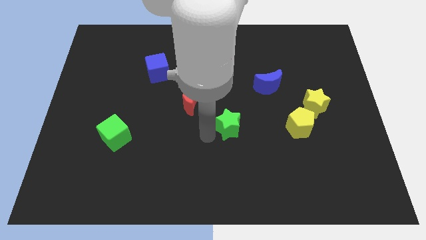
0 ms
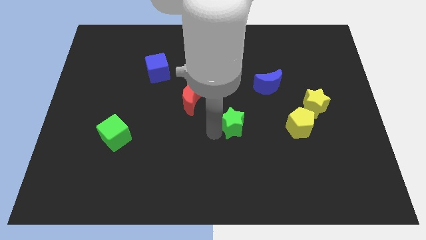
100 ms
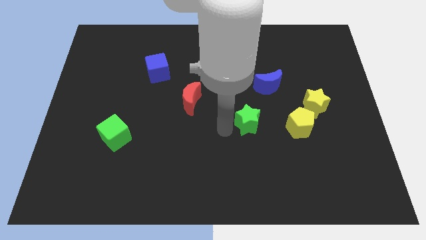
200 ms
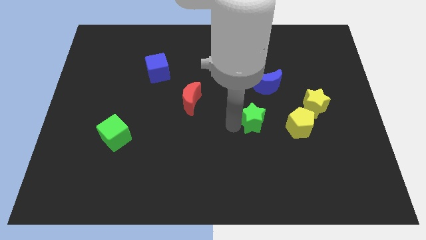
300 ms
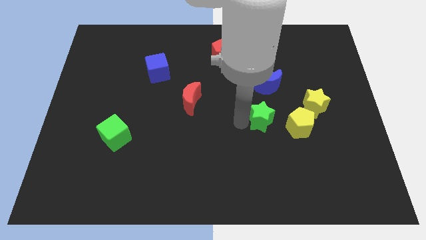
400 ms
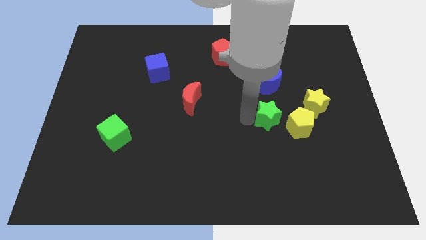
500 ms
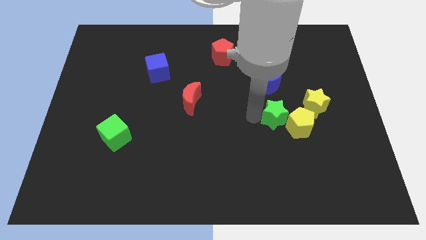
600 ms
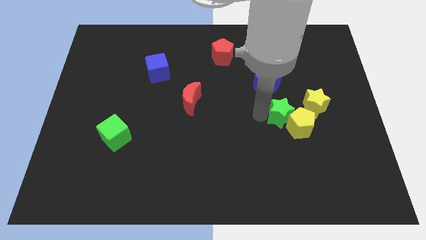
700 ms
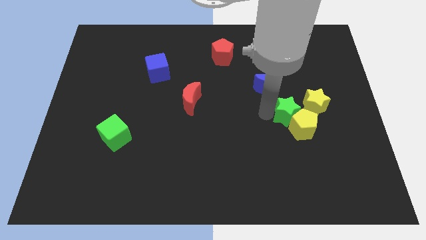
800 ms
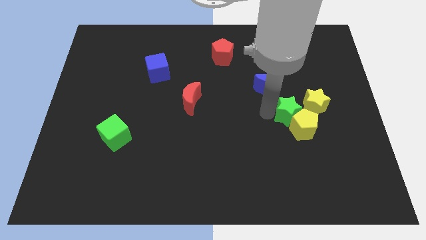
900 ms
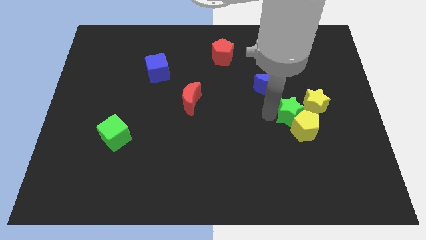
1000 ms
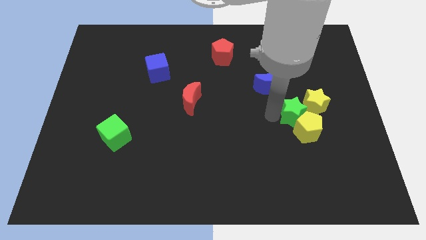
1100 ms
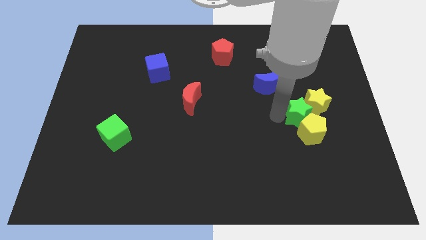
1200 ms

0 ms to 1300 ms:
place the green star diagonal top left of the yellow pentagon

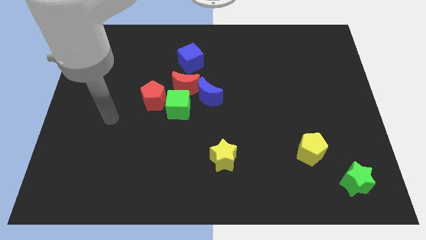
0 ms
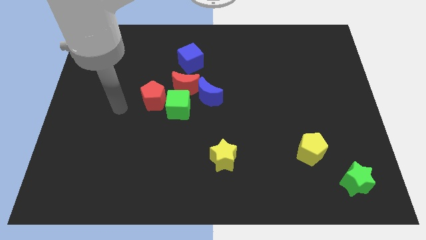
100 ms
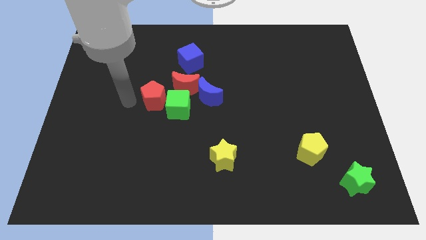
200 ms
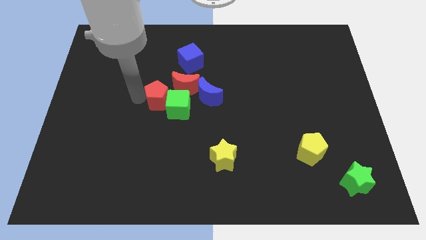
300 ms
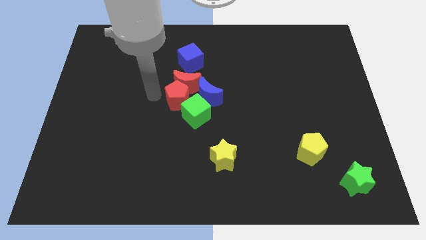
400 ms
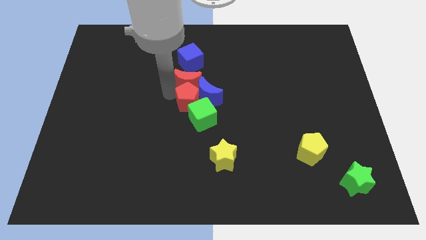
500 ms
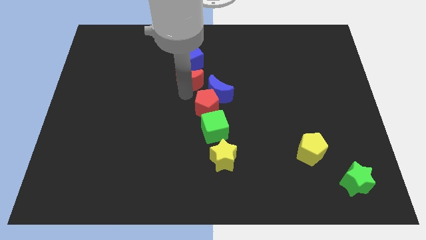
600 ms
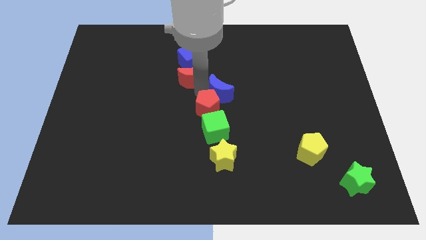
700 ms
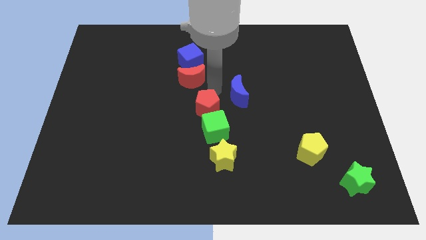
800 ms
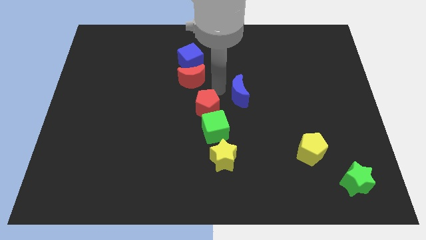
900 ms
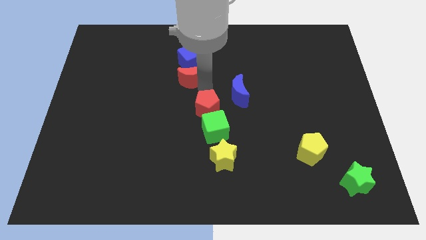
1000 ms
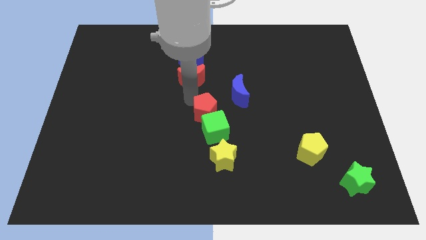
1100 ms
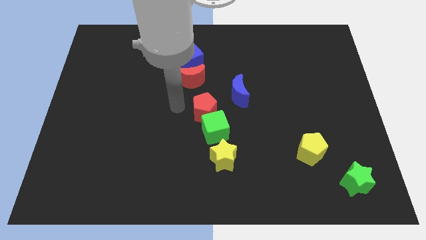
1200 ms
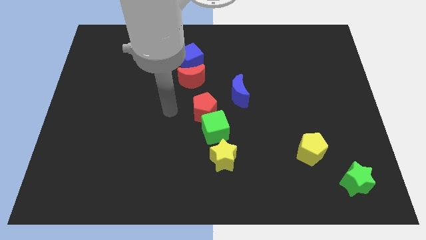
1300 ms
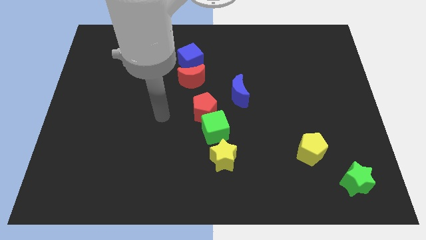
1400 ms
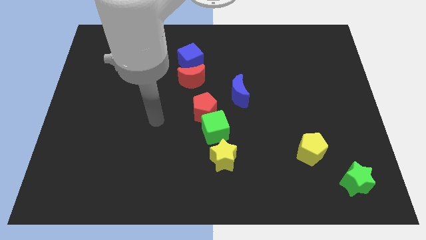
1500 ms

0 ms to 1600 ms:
place the red pentagon above the green cube

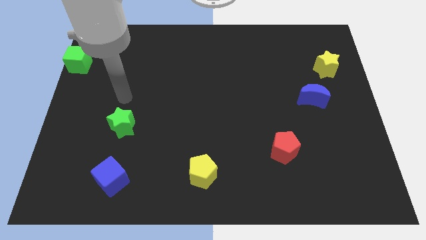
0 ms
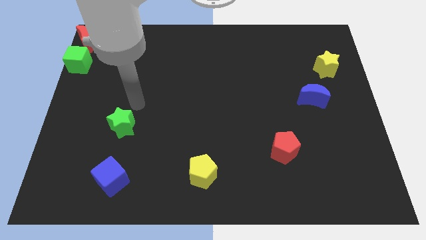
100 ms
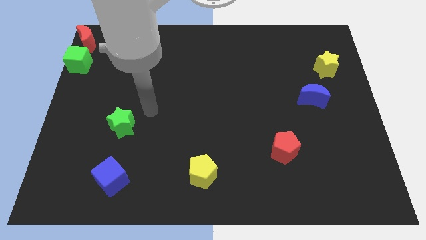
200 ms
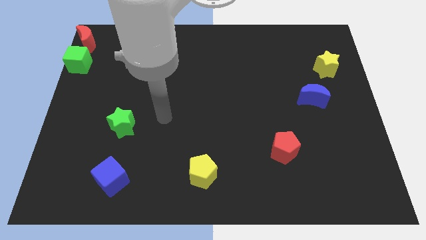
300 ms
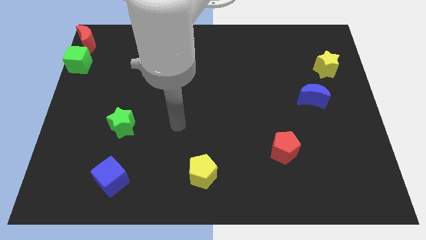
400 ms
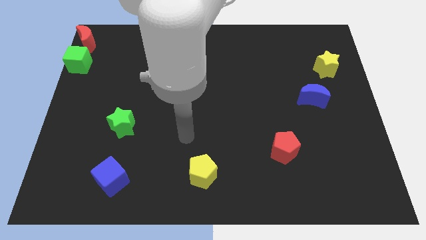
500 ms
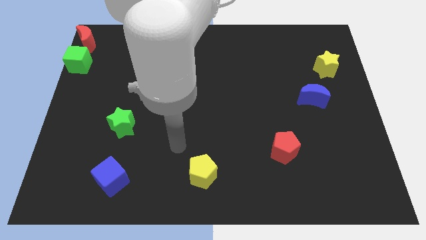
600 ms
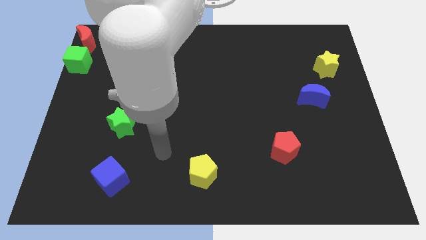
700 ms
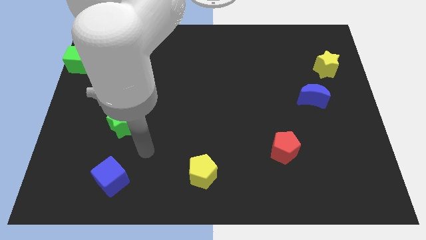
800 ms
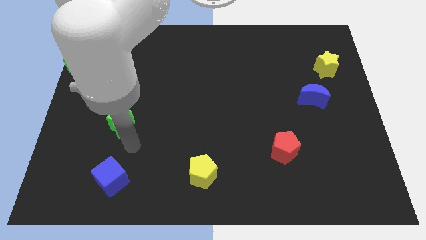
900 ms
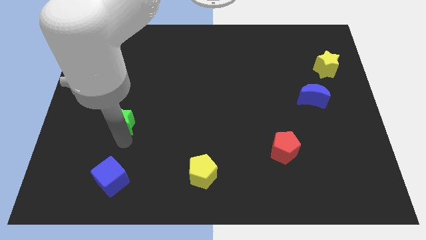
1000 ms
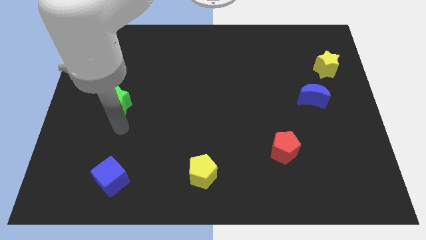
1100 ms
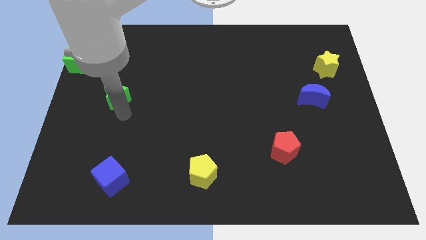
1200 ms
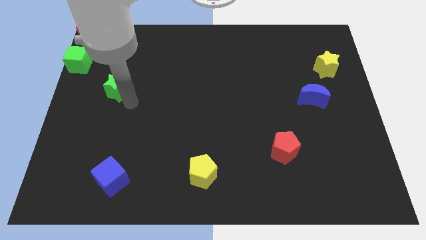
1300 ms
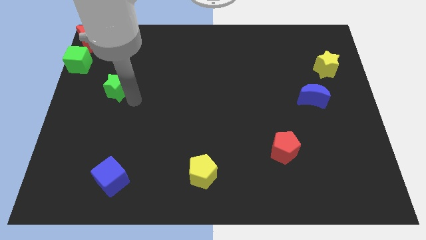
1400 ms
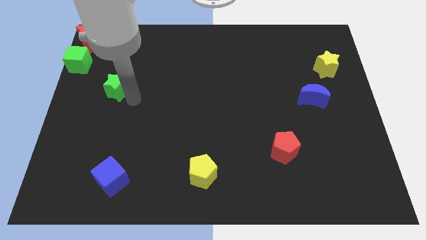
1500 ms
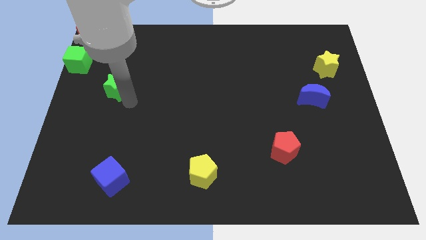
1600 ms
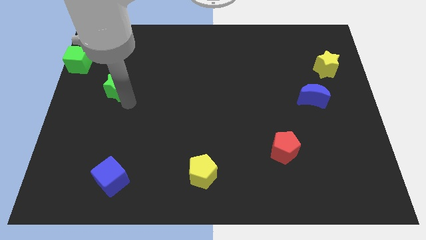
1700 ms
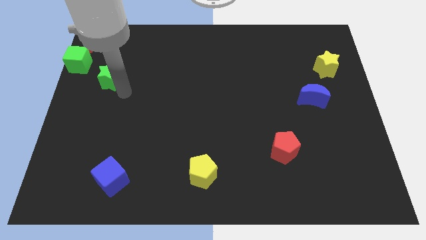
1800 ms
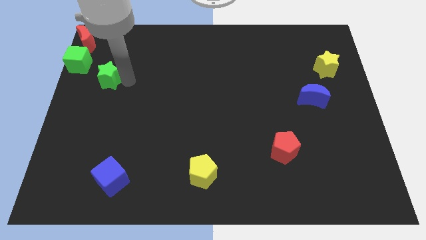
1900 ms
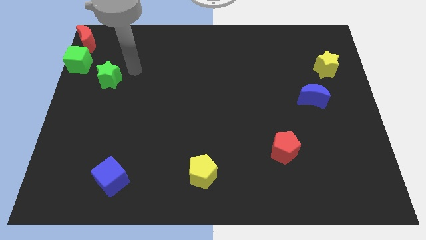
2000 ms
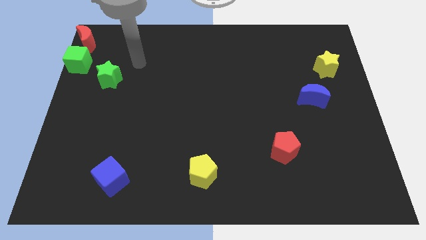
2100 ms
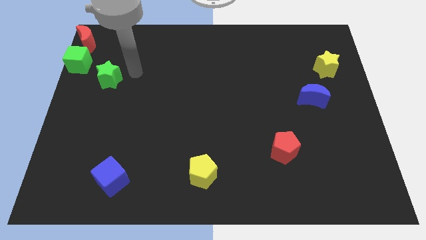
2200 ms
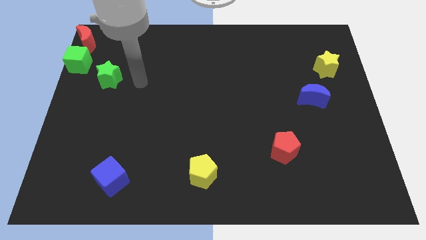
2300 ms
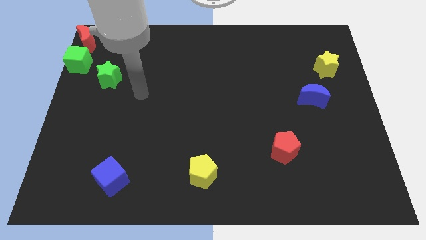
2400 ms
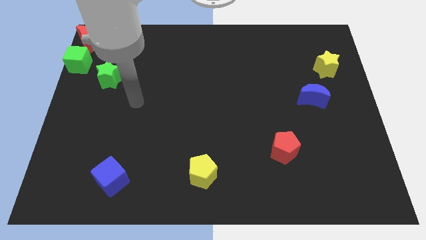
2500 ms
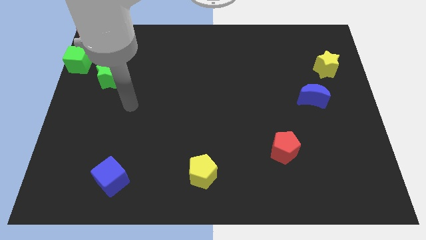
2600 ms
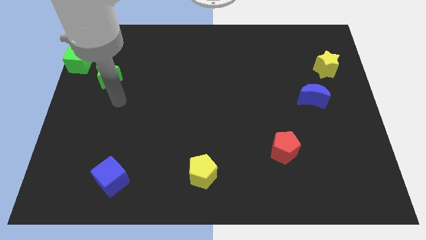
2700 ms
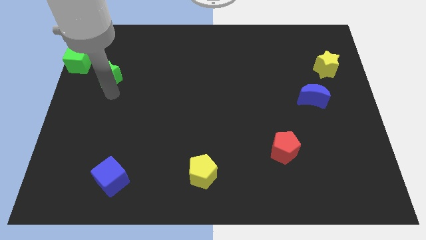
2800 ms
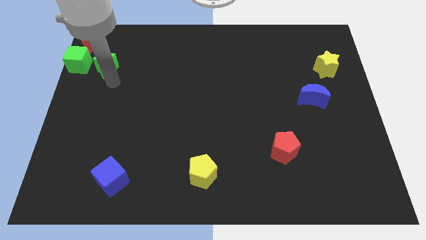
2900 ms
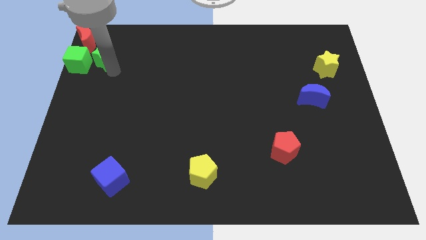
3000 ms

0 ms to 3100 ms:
push the green star right to the green cube

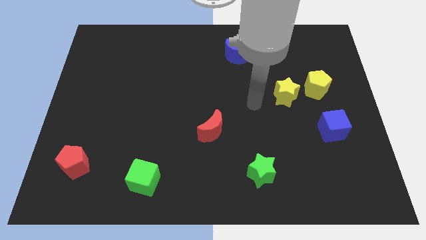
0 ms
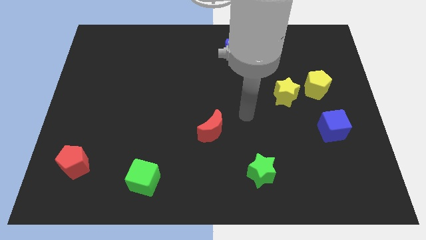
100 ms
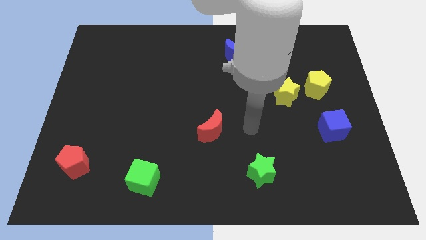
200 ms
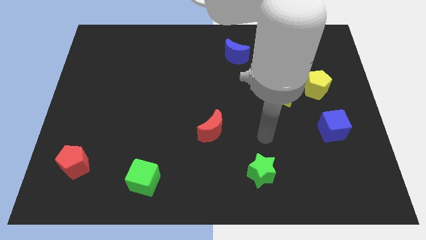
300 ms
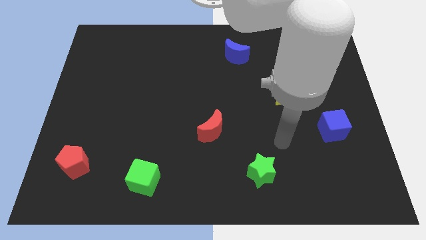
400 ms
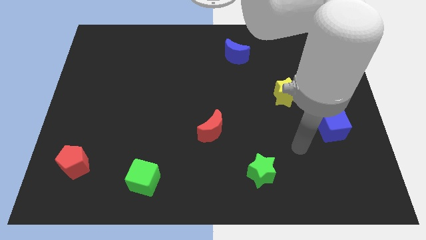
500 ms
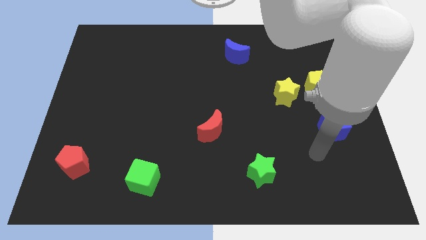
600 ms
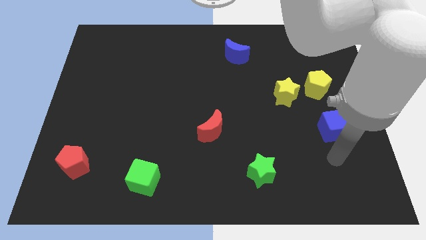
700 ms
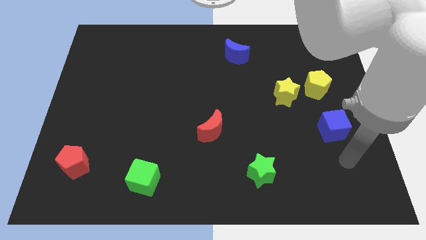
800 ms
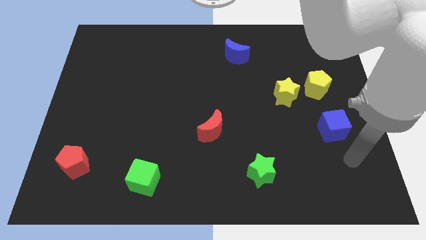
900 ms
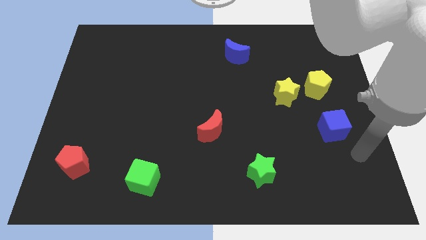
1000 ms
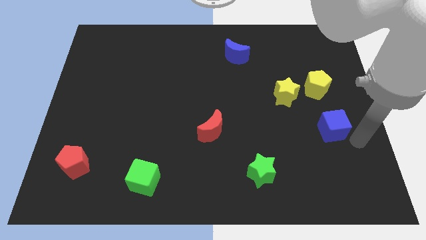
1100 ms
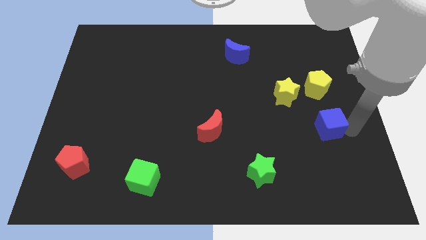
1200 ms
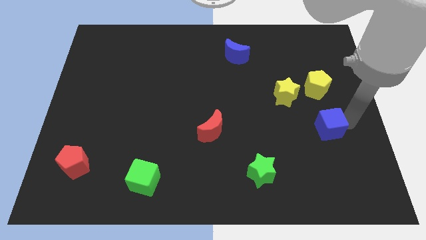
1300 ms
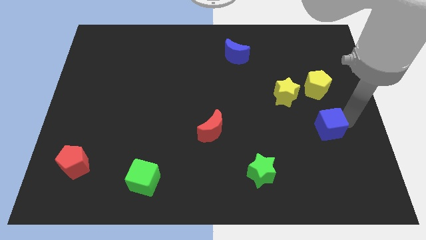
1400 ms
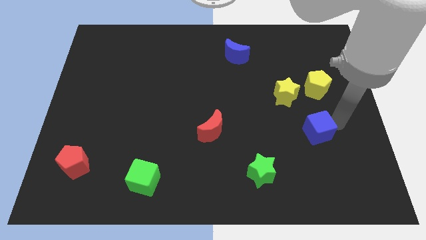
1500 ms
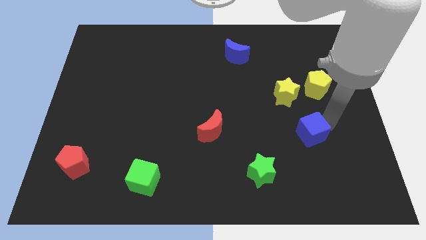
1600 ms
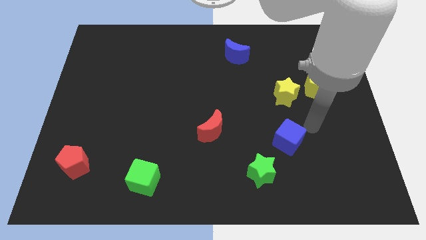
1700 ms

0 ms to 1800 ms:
push the blue cube downwards

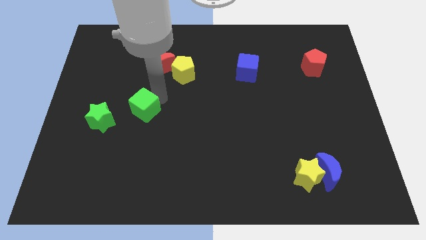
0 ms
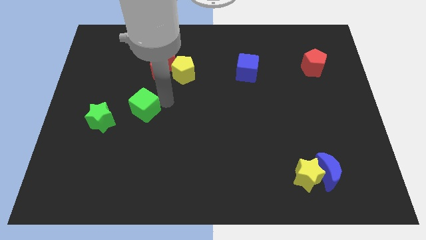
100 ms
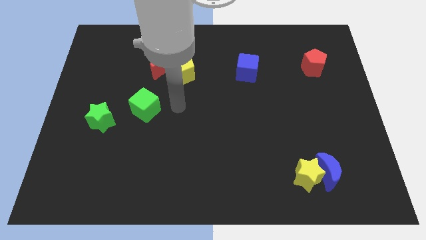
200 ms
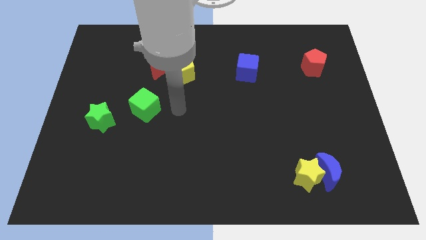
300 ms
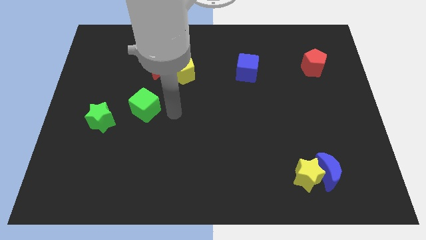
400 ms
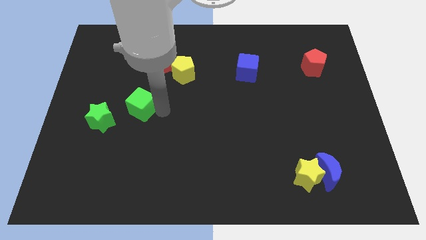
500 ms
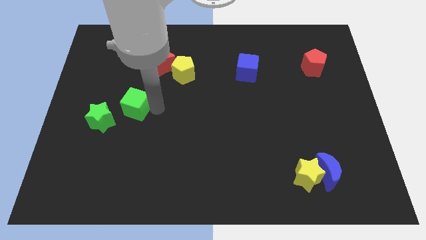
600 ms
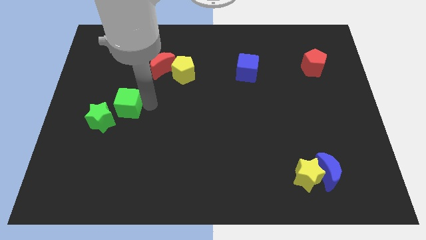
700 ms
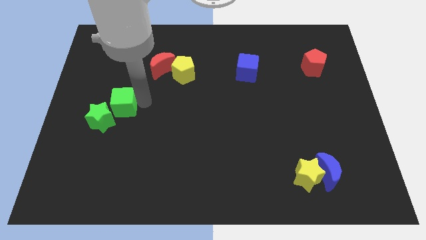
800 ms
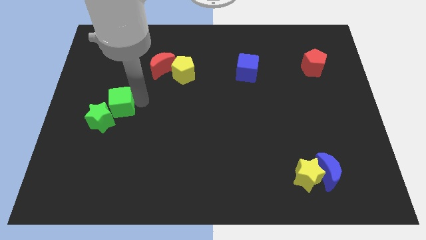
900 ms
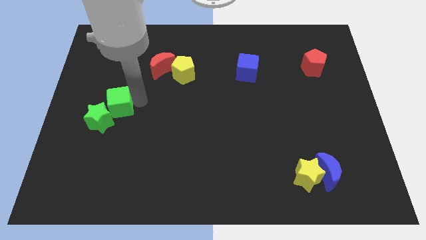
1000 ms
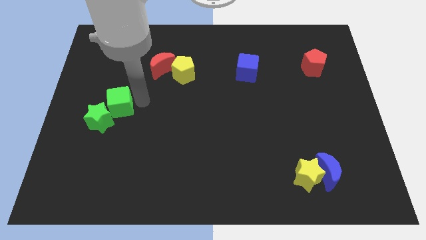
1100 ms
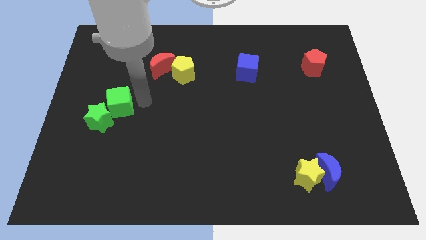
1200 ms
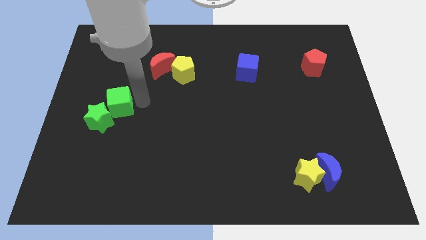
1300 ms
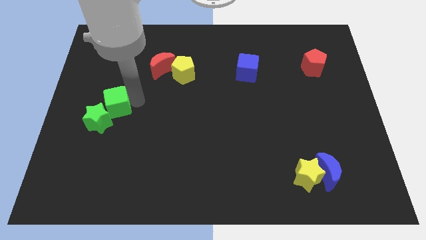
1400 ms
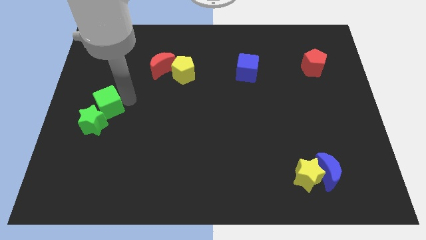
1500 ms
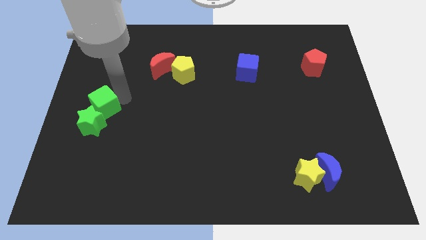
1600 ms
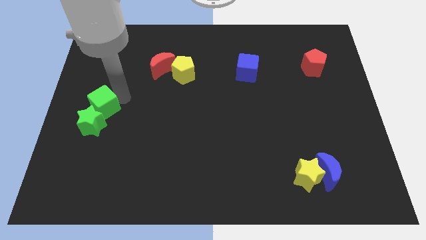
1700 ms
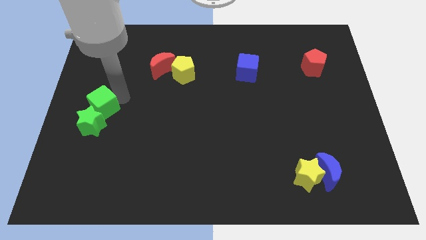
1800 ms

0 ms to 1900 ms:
push the green cube into the green star
